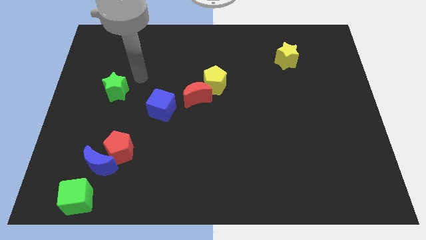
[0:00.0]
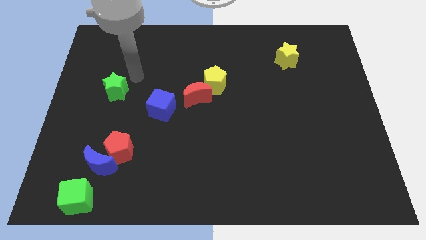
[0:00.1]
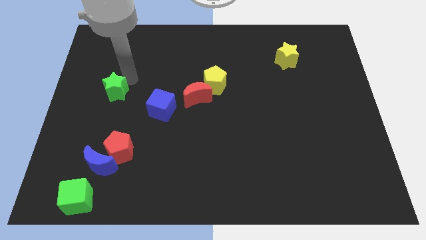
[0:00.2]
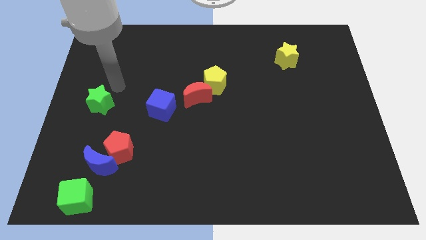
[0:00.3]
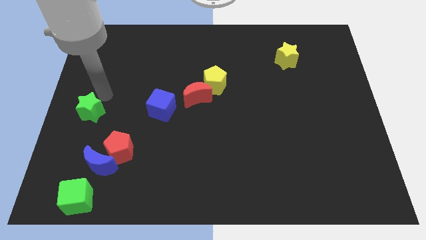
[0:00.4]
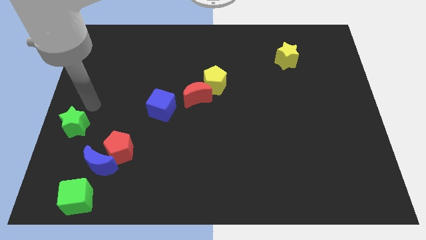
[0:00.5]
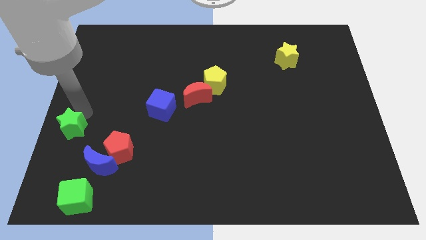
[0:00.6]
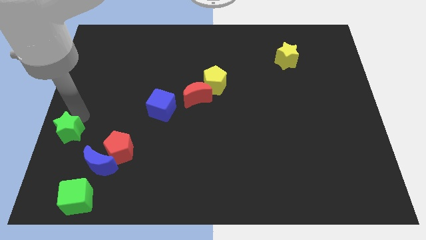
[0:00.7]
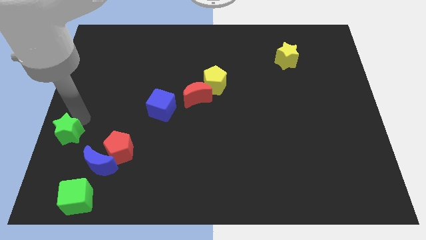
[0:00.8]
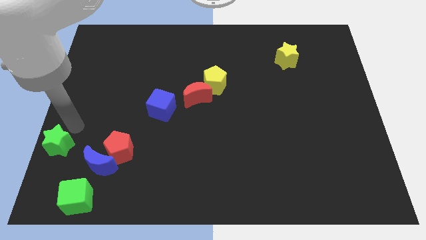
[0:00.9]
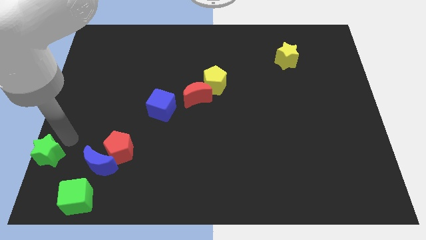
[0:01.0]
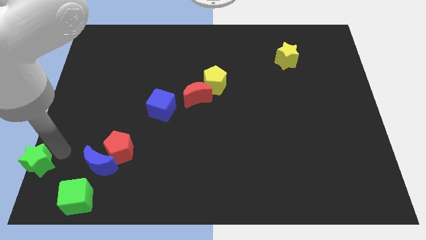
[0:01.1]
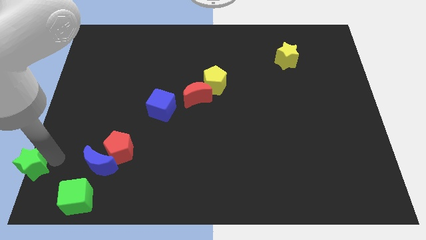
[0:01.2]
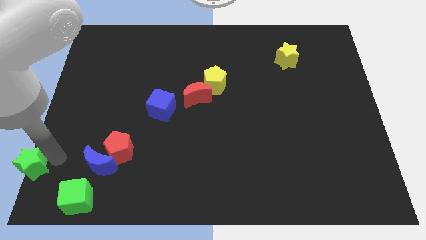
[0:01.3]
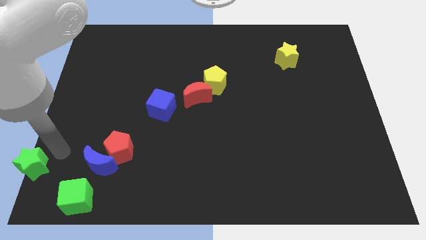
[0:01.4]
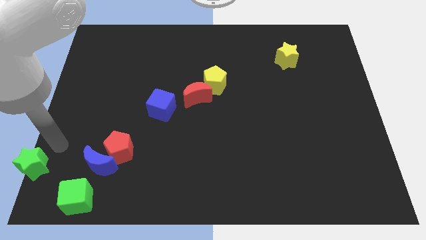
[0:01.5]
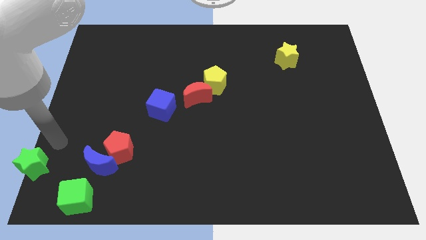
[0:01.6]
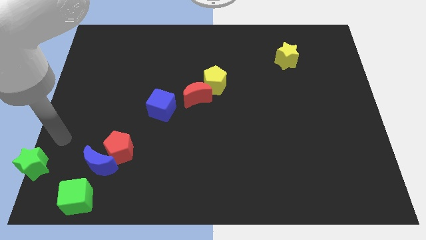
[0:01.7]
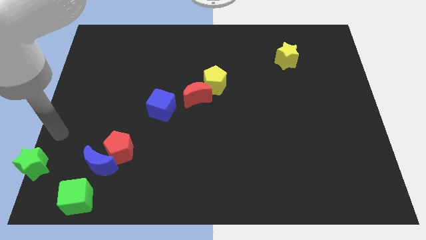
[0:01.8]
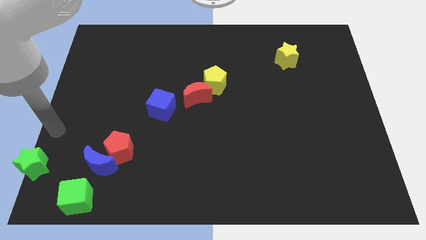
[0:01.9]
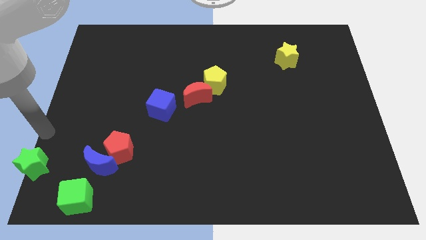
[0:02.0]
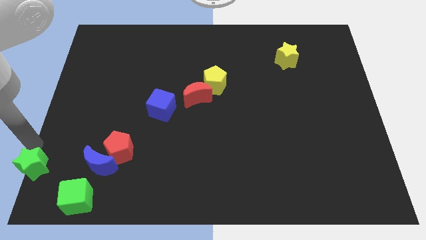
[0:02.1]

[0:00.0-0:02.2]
push the green star towards bottom left side of the board

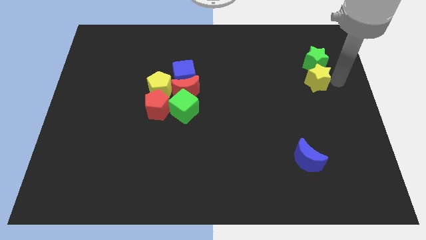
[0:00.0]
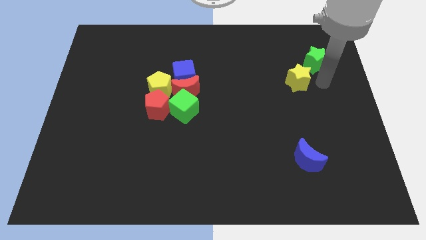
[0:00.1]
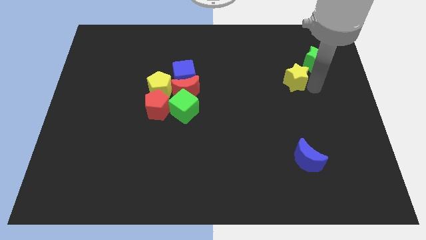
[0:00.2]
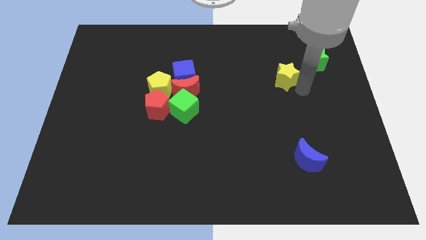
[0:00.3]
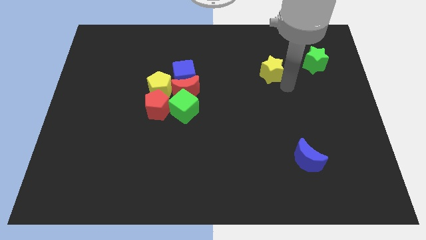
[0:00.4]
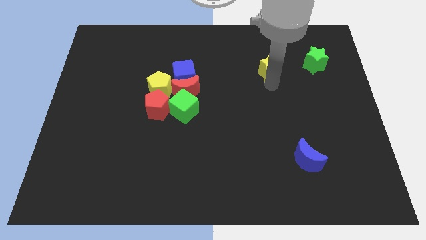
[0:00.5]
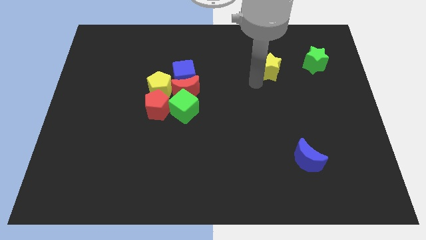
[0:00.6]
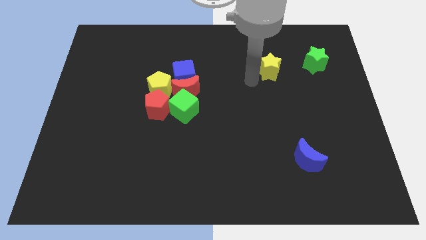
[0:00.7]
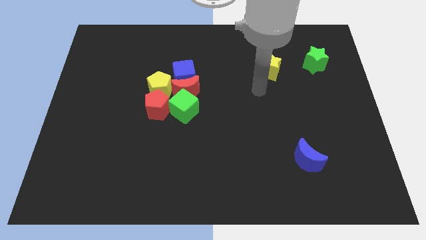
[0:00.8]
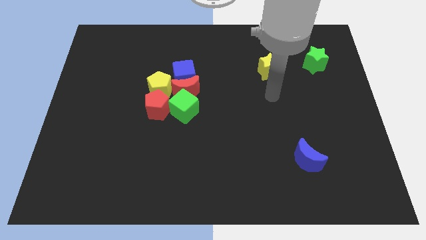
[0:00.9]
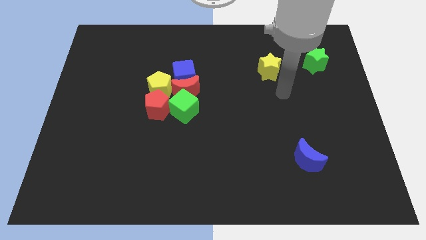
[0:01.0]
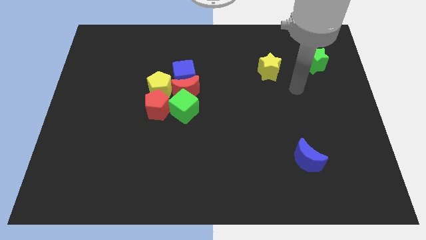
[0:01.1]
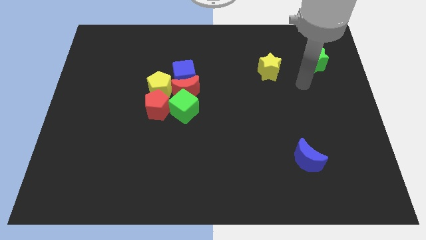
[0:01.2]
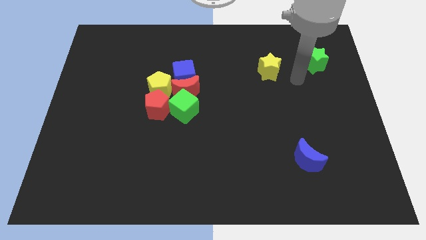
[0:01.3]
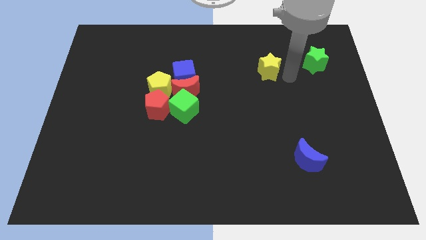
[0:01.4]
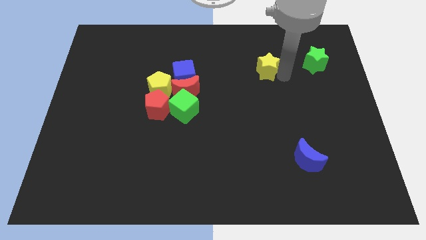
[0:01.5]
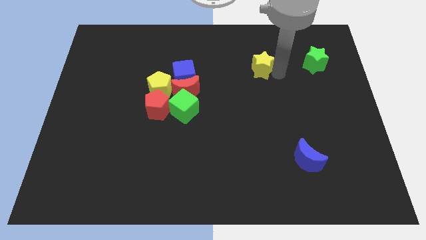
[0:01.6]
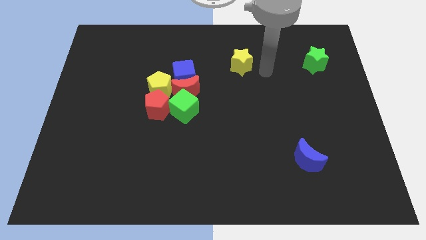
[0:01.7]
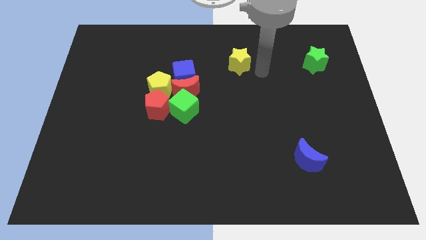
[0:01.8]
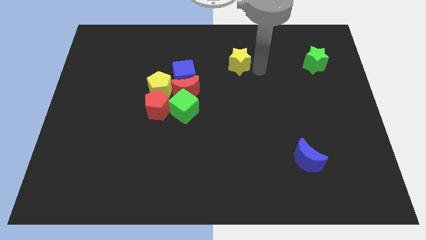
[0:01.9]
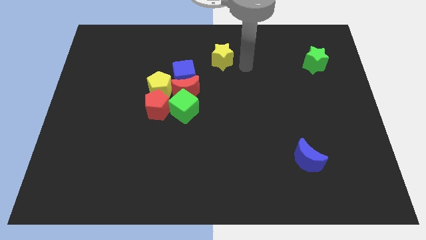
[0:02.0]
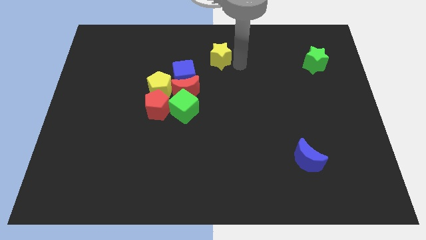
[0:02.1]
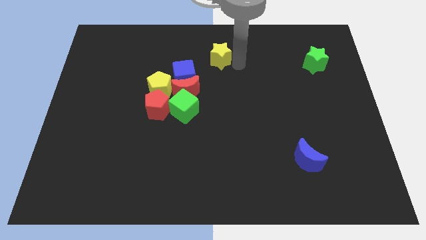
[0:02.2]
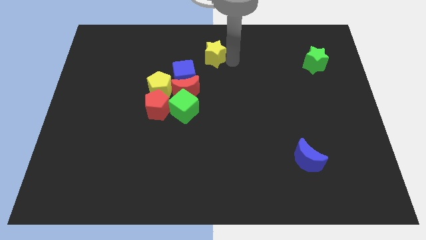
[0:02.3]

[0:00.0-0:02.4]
push the yellow star towards the top center of the board

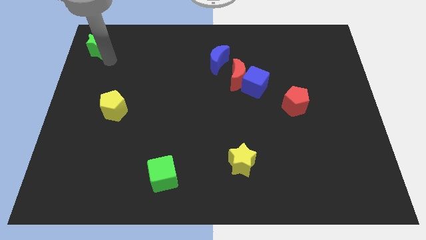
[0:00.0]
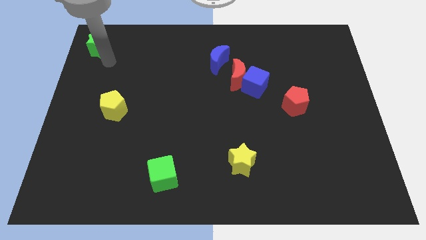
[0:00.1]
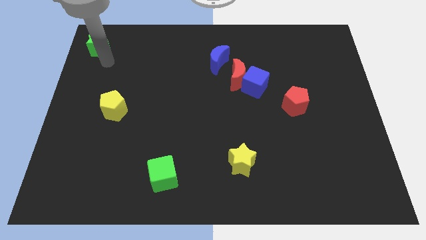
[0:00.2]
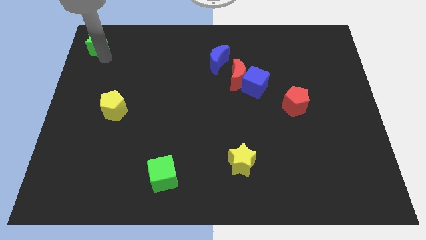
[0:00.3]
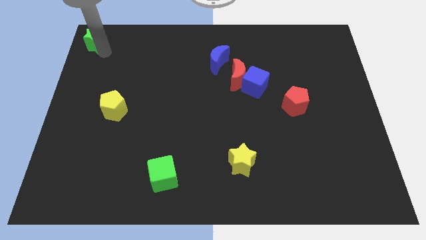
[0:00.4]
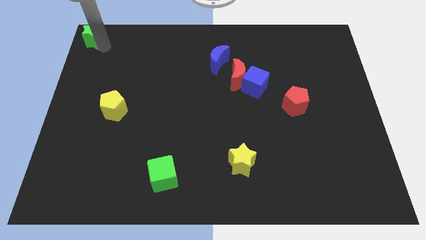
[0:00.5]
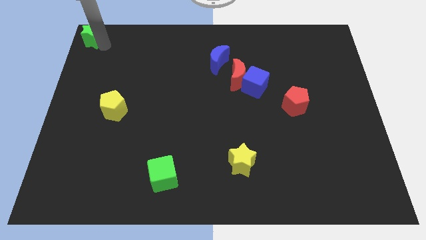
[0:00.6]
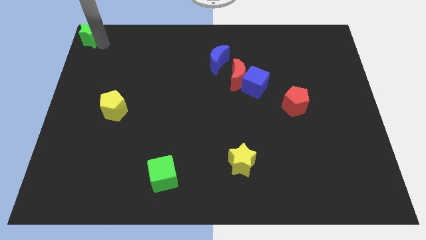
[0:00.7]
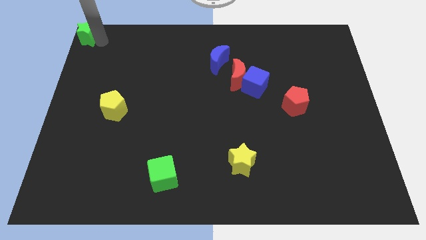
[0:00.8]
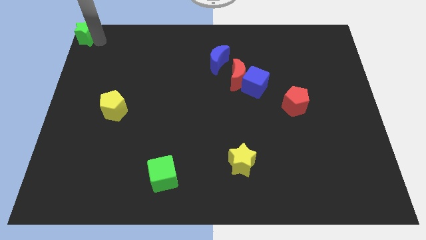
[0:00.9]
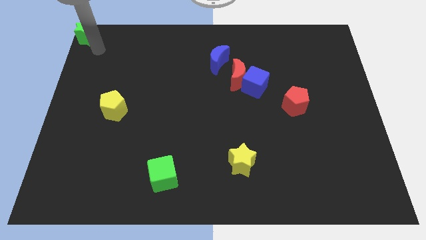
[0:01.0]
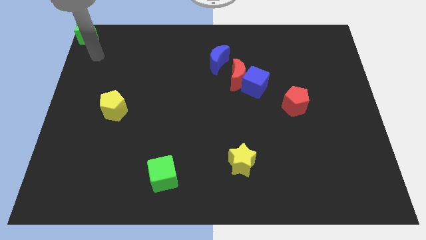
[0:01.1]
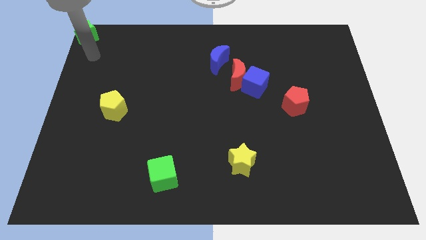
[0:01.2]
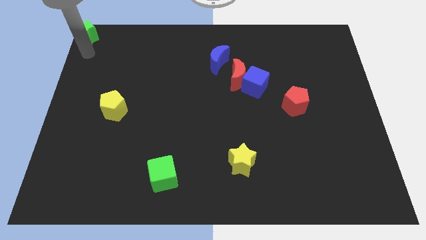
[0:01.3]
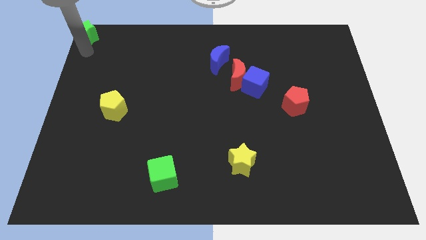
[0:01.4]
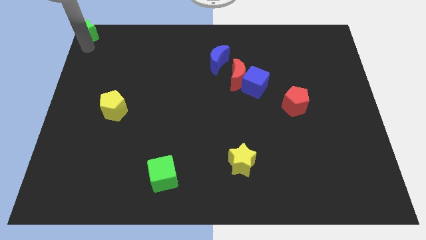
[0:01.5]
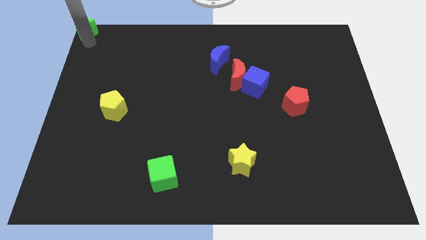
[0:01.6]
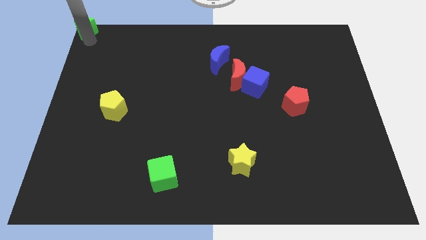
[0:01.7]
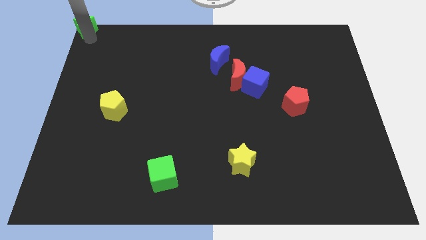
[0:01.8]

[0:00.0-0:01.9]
move the green star to the top left corner of the board

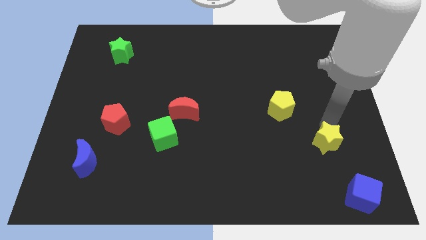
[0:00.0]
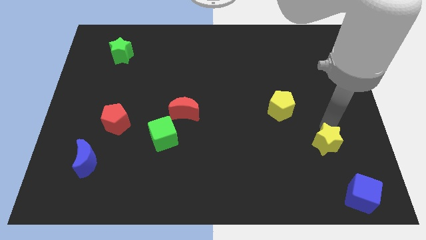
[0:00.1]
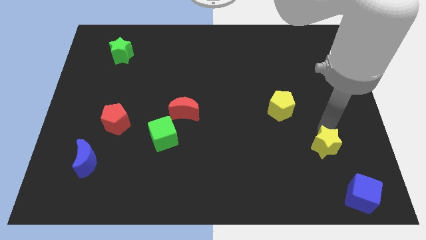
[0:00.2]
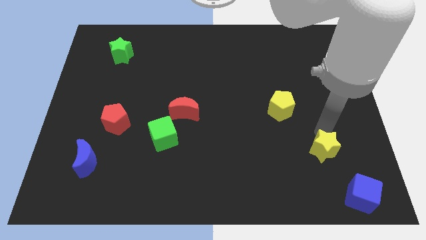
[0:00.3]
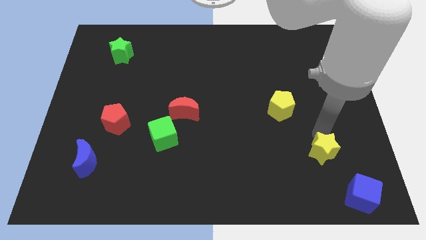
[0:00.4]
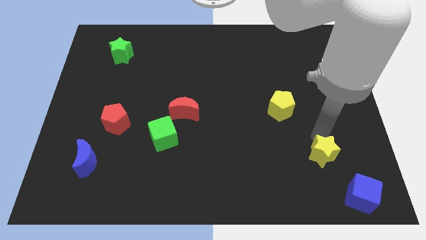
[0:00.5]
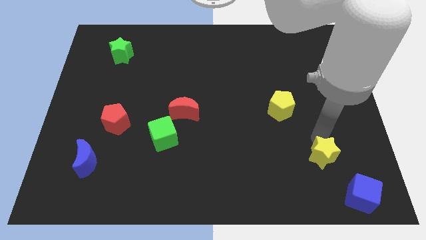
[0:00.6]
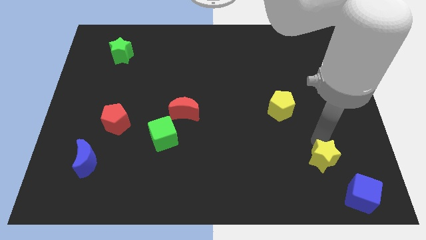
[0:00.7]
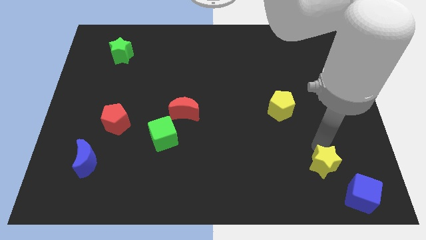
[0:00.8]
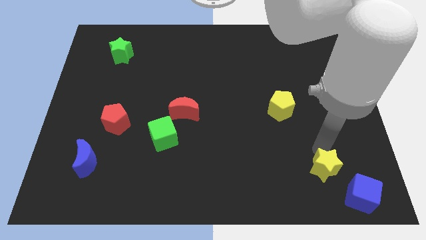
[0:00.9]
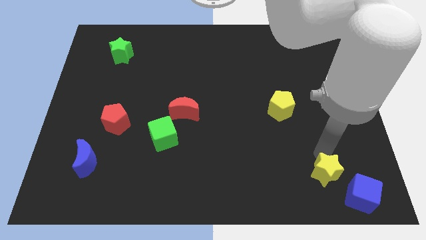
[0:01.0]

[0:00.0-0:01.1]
move yellow star towards blue cube

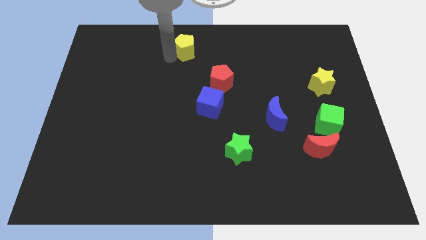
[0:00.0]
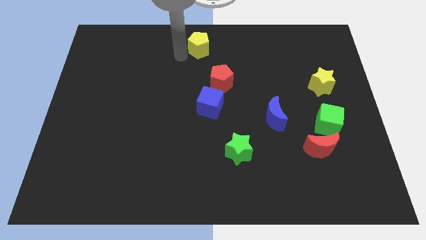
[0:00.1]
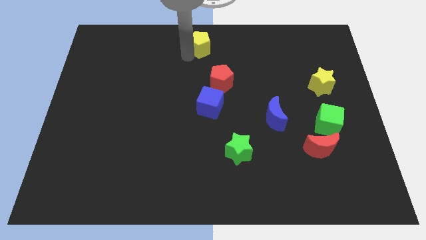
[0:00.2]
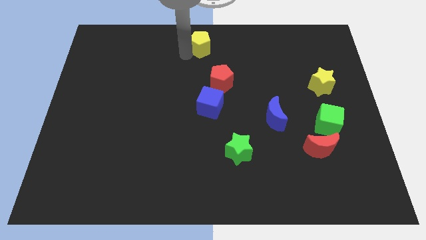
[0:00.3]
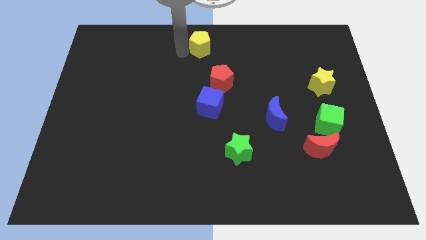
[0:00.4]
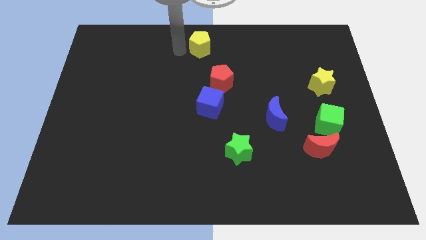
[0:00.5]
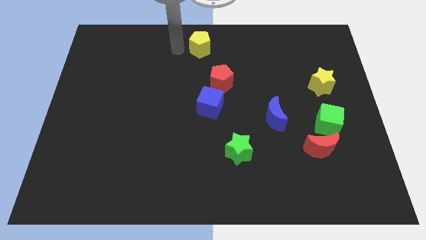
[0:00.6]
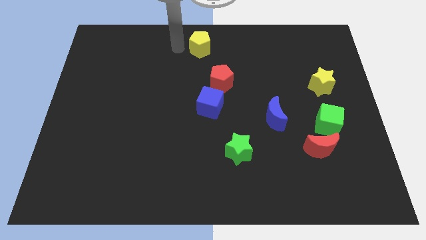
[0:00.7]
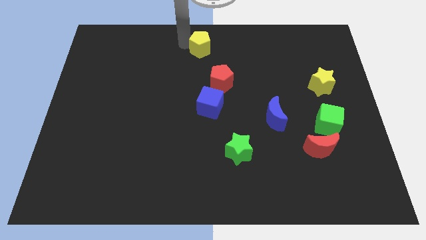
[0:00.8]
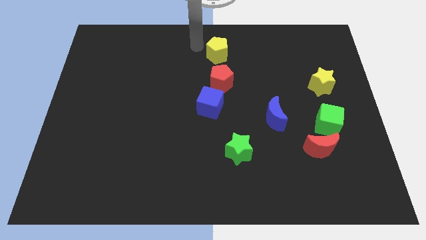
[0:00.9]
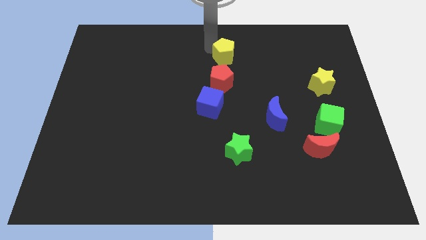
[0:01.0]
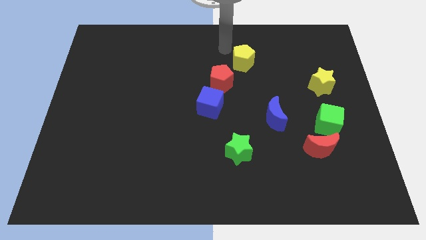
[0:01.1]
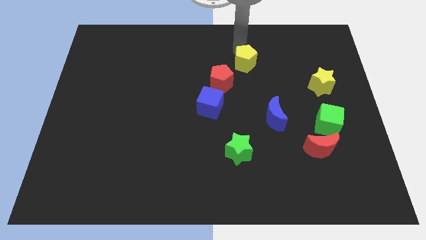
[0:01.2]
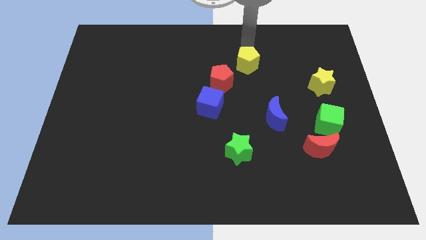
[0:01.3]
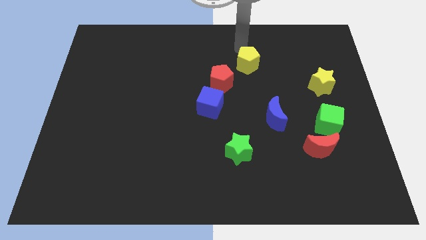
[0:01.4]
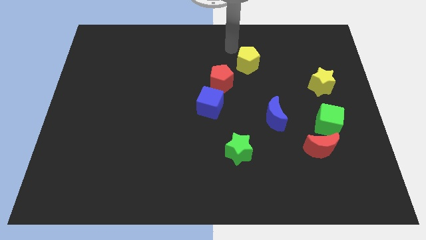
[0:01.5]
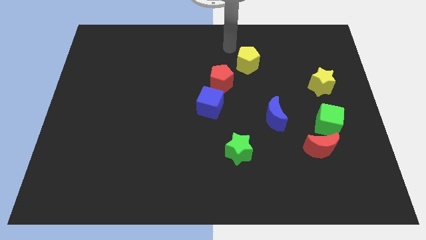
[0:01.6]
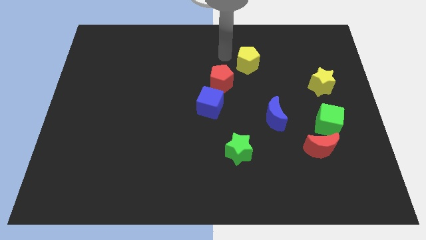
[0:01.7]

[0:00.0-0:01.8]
put the yellow pentagon at the top right of the red pentagon
